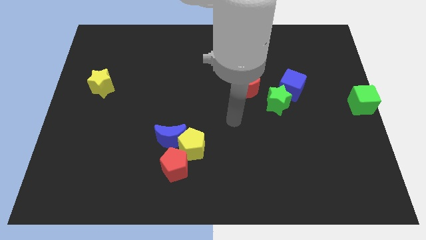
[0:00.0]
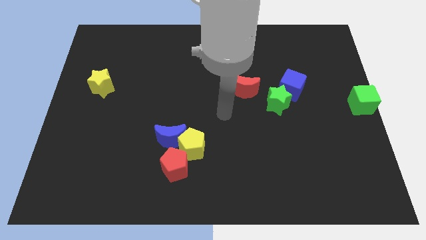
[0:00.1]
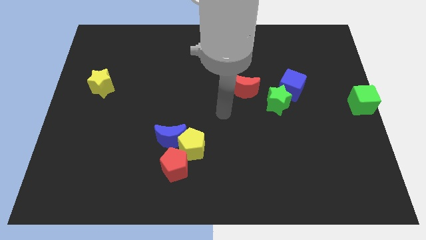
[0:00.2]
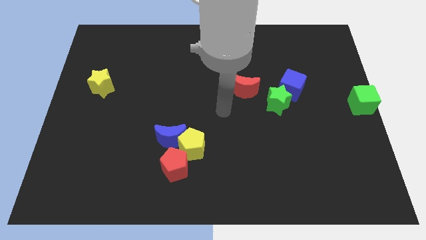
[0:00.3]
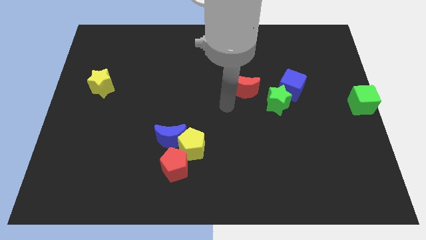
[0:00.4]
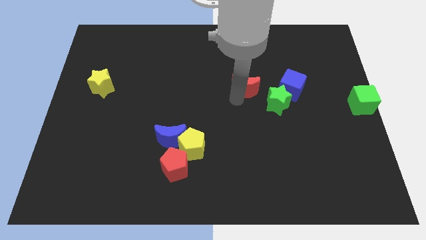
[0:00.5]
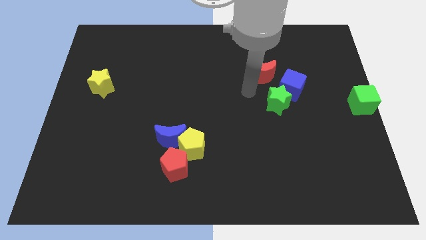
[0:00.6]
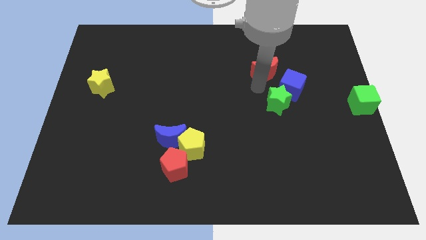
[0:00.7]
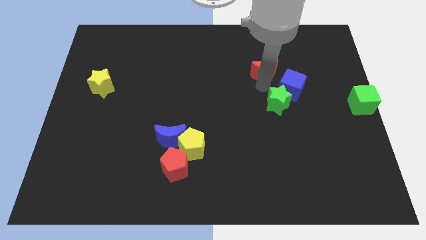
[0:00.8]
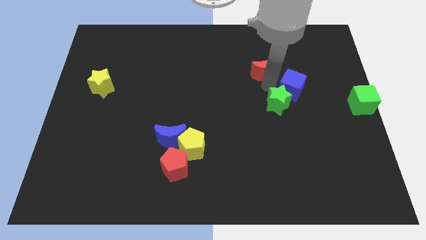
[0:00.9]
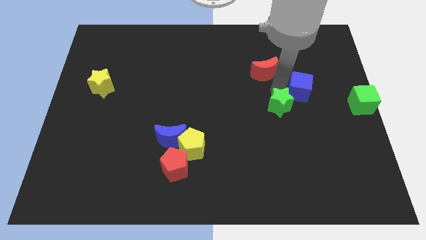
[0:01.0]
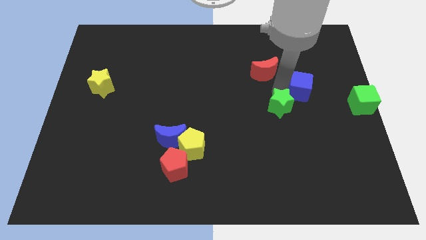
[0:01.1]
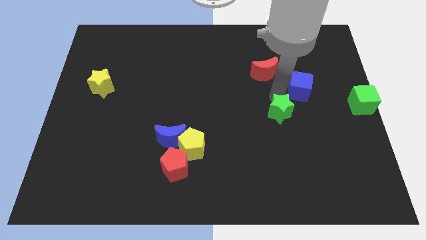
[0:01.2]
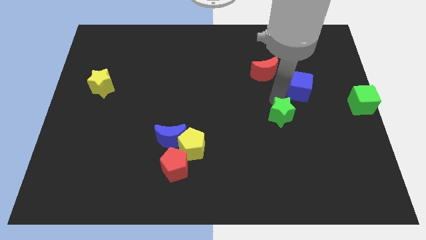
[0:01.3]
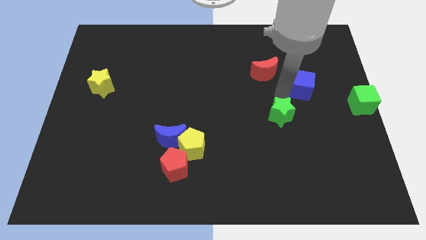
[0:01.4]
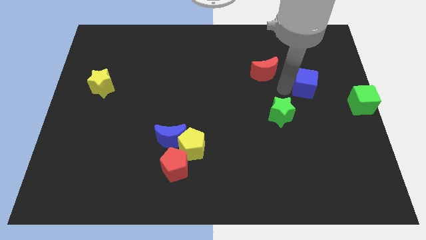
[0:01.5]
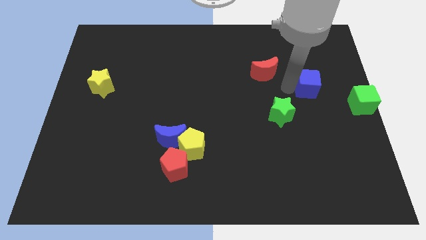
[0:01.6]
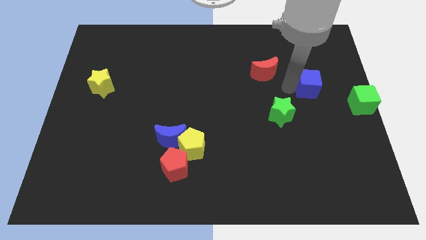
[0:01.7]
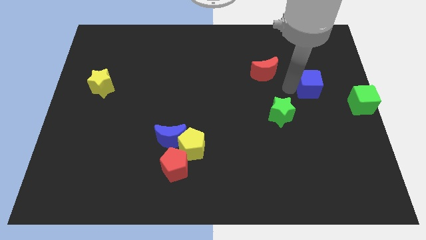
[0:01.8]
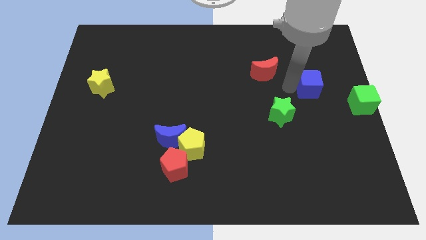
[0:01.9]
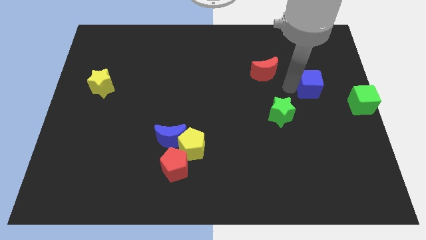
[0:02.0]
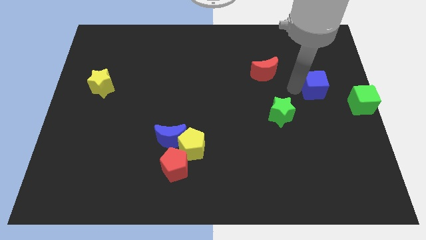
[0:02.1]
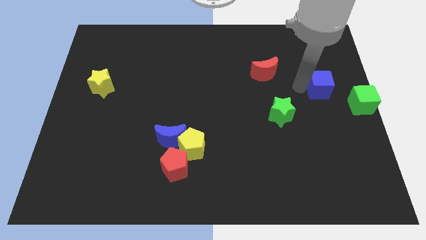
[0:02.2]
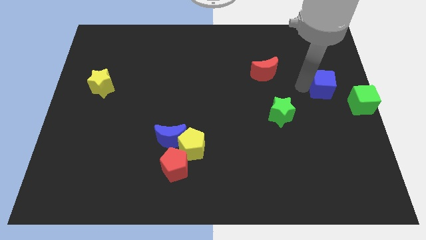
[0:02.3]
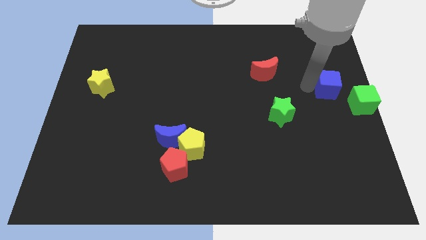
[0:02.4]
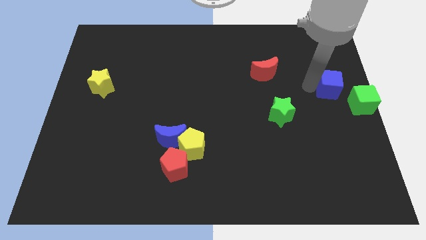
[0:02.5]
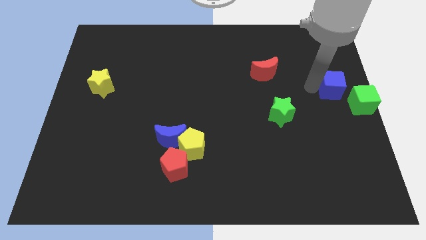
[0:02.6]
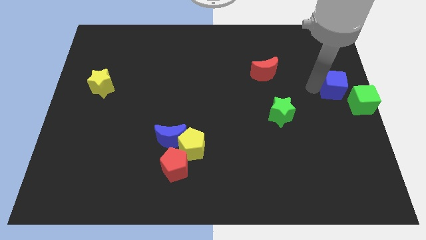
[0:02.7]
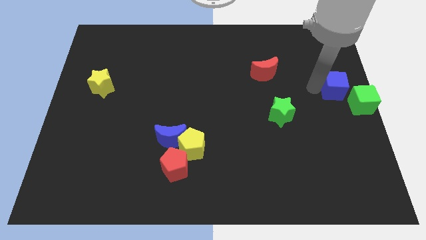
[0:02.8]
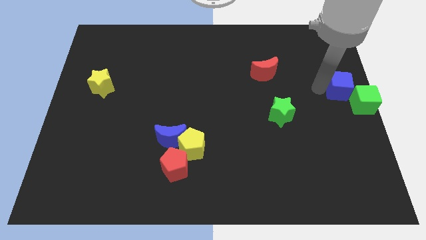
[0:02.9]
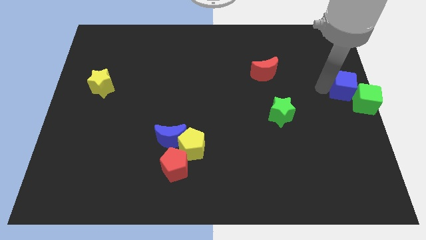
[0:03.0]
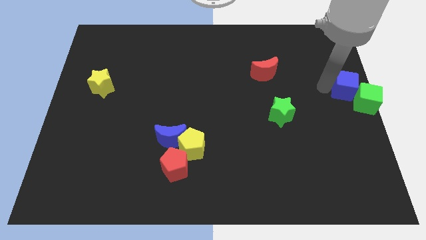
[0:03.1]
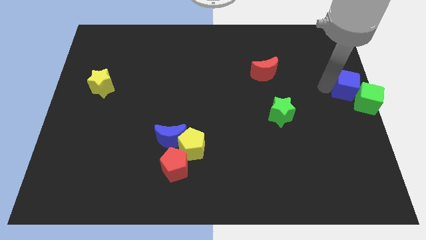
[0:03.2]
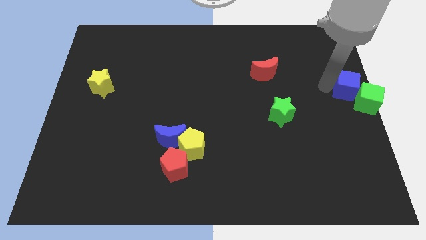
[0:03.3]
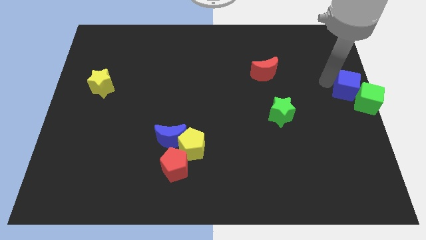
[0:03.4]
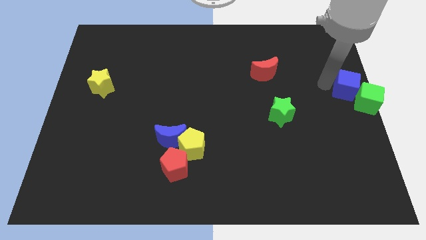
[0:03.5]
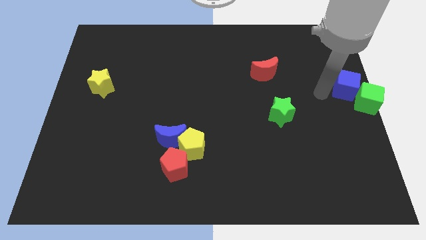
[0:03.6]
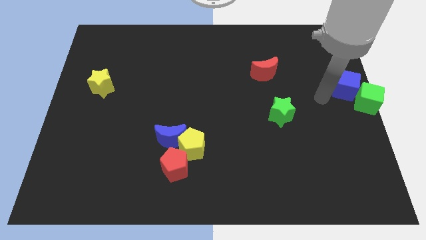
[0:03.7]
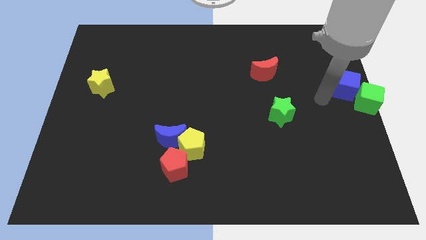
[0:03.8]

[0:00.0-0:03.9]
separate the blue cube from the green star

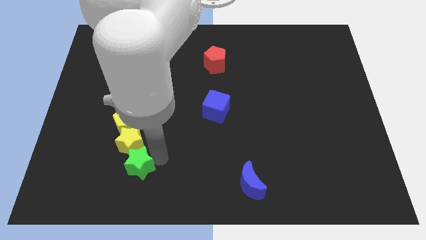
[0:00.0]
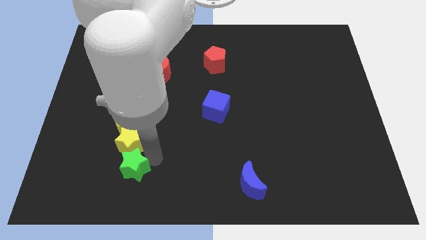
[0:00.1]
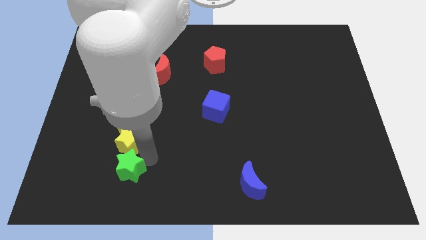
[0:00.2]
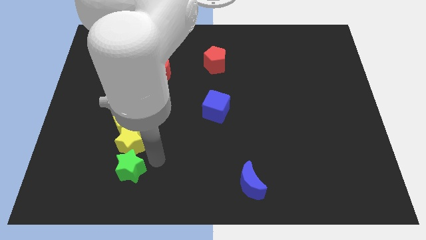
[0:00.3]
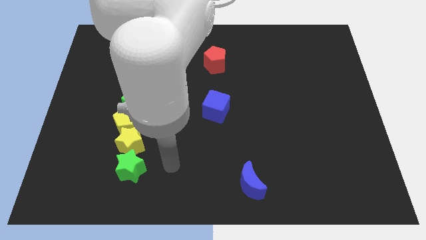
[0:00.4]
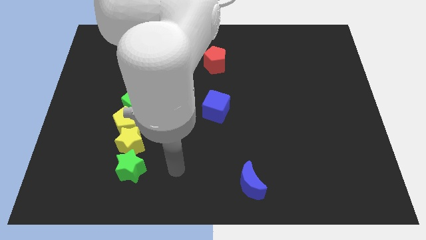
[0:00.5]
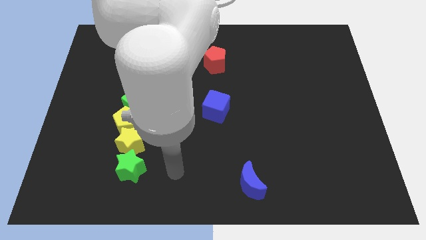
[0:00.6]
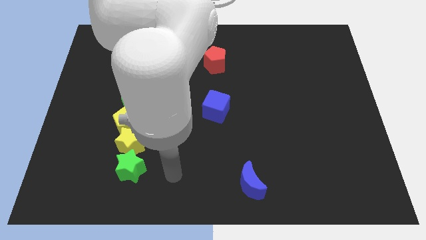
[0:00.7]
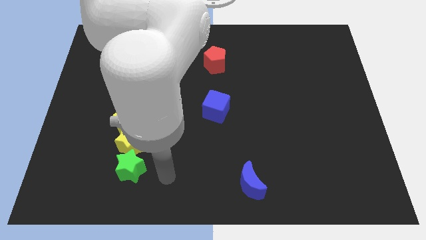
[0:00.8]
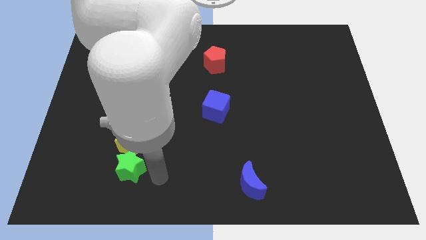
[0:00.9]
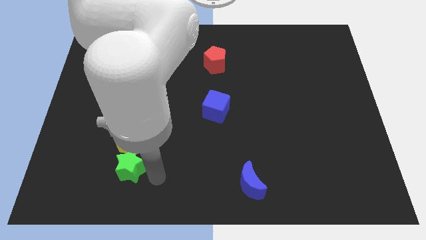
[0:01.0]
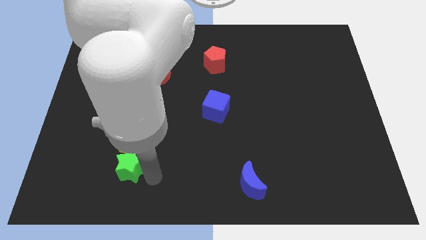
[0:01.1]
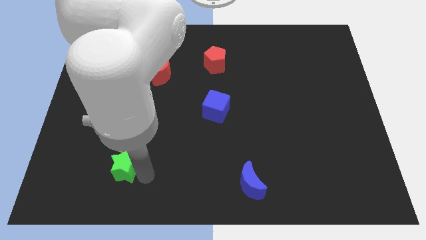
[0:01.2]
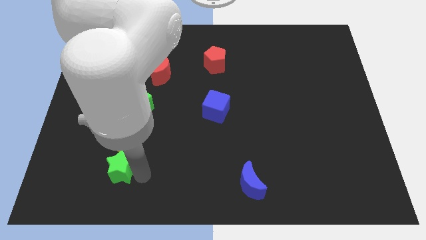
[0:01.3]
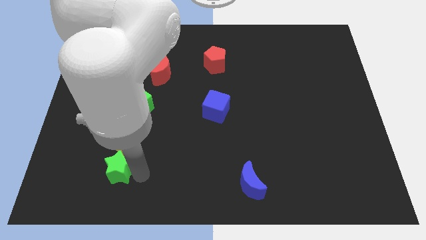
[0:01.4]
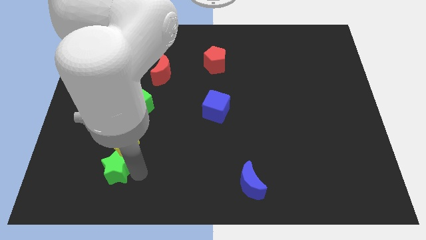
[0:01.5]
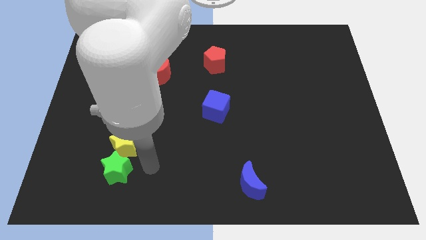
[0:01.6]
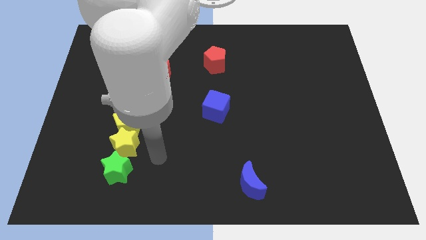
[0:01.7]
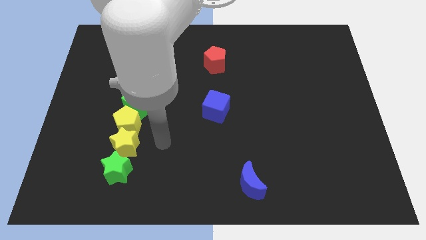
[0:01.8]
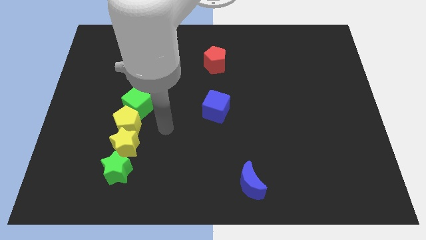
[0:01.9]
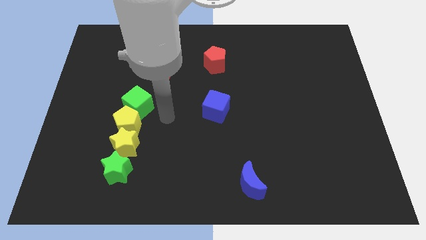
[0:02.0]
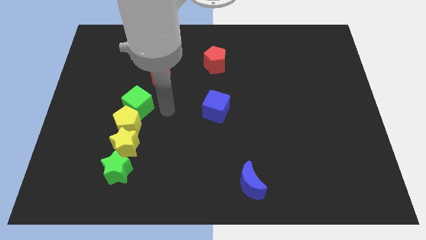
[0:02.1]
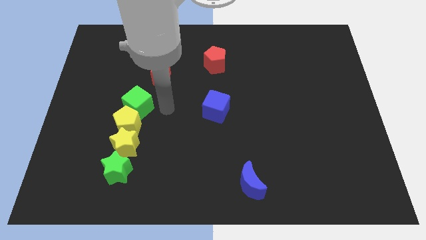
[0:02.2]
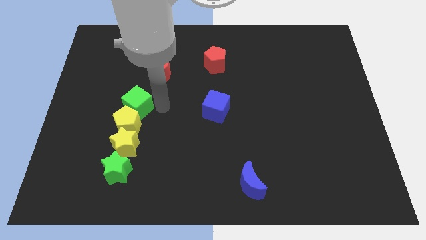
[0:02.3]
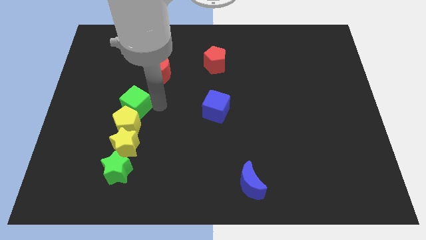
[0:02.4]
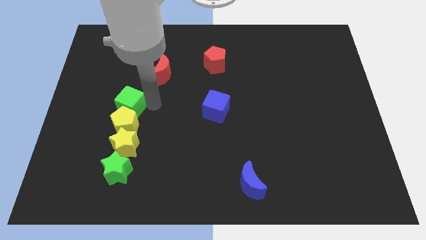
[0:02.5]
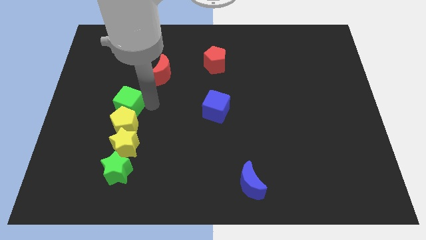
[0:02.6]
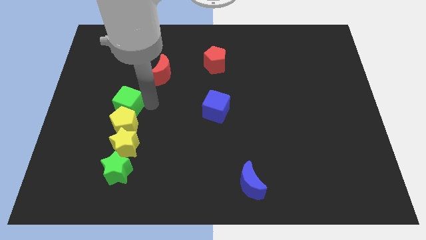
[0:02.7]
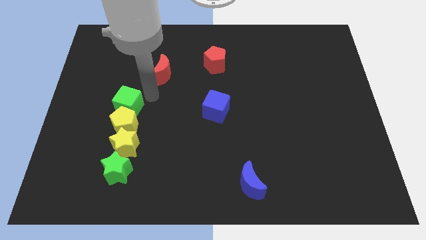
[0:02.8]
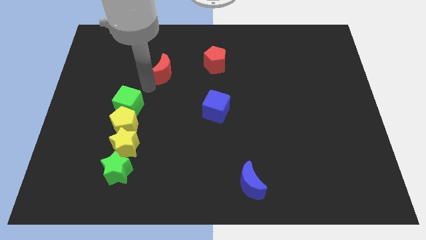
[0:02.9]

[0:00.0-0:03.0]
adjust the green star and green cube in a vertical line with yellow blocks

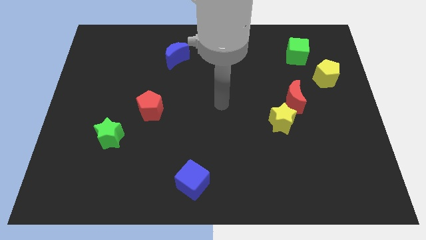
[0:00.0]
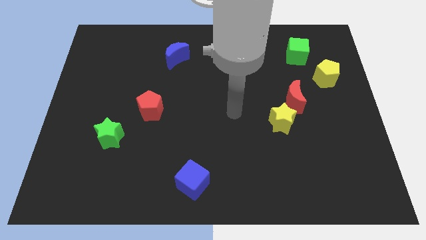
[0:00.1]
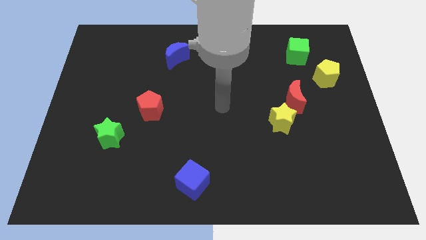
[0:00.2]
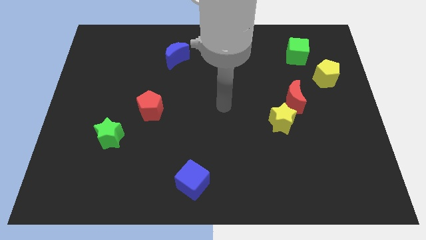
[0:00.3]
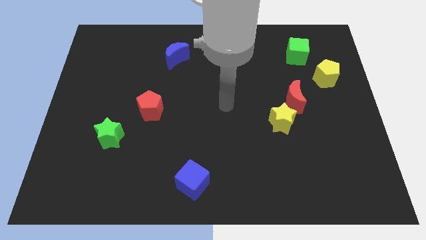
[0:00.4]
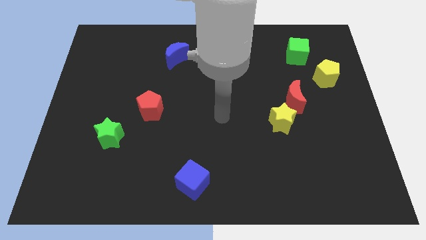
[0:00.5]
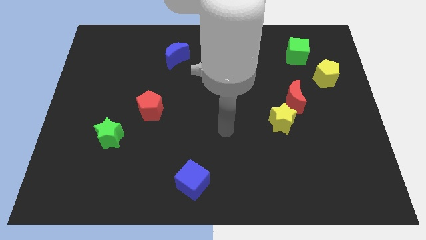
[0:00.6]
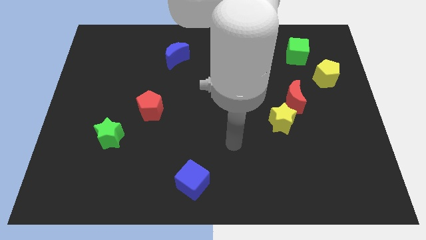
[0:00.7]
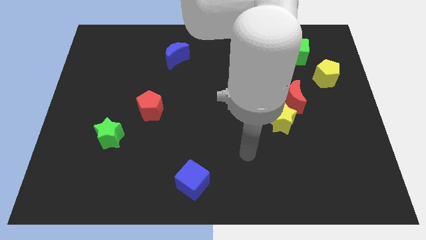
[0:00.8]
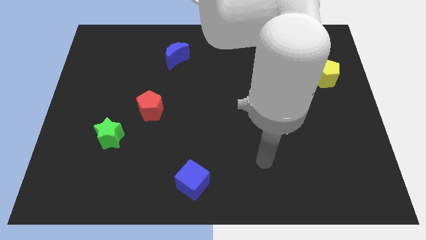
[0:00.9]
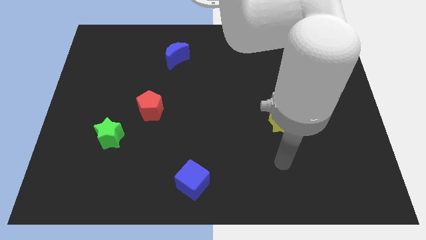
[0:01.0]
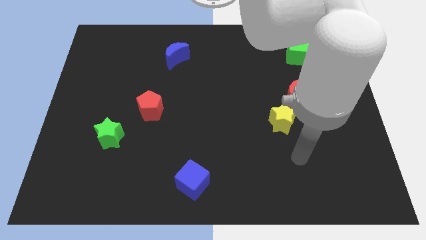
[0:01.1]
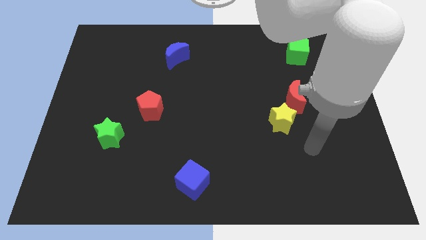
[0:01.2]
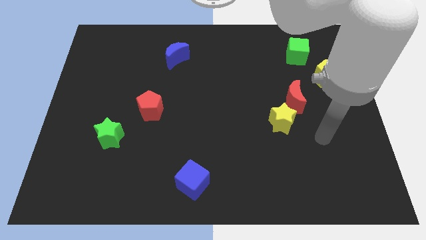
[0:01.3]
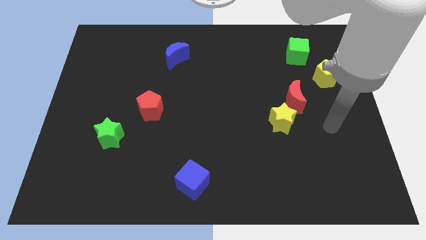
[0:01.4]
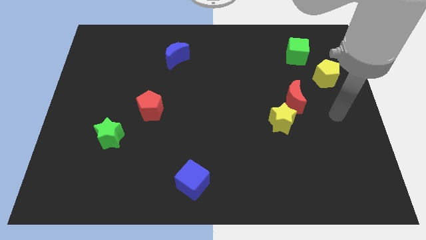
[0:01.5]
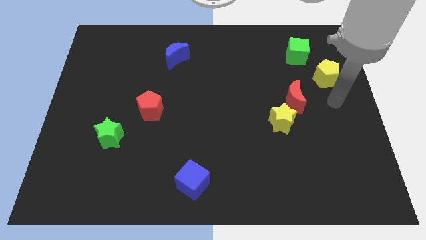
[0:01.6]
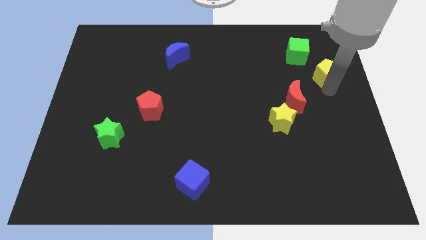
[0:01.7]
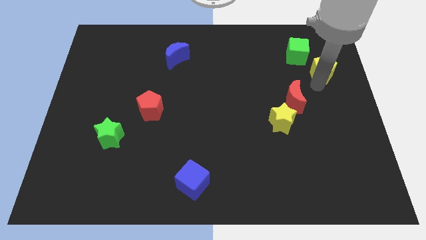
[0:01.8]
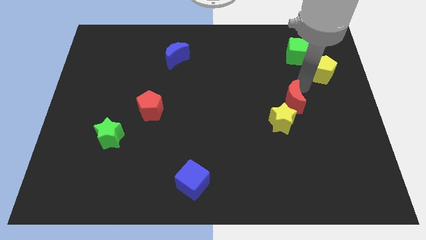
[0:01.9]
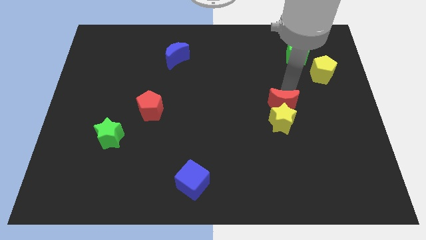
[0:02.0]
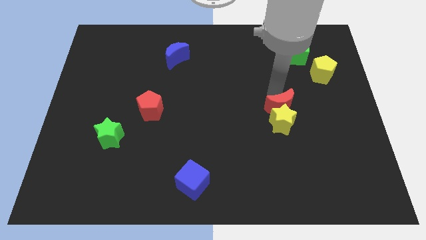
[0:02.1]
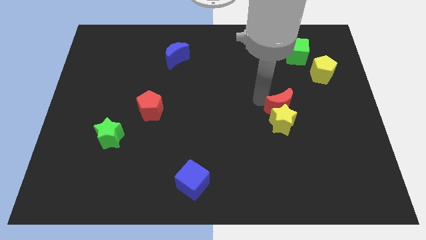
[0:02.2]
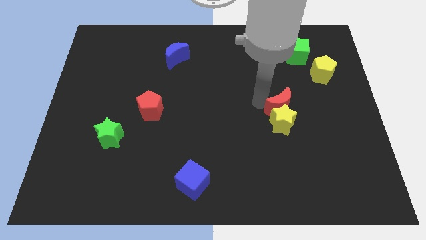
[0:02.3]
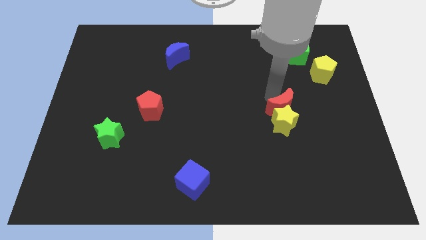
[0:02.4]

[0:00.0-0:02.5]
slightly move red moon close to the yellow star
